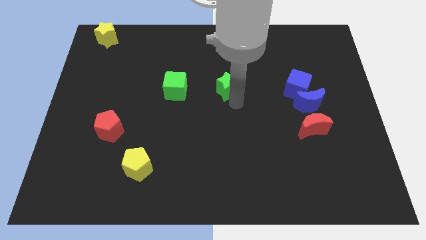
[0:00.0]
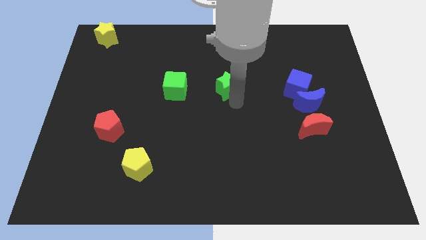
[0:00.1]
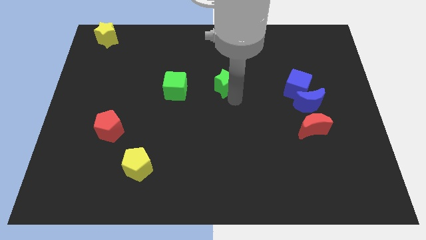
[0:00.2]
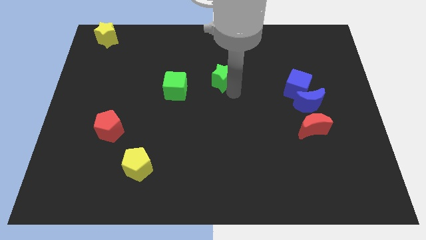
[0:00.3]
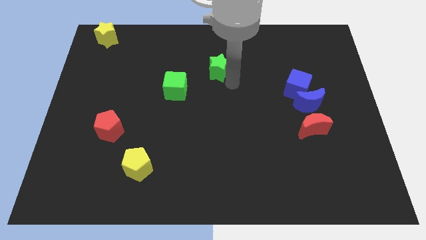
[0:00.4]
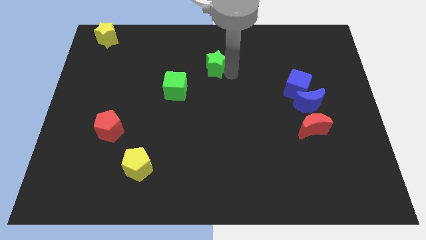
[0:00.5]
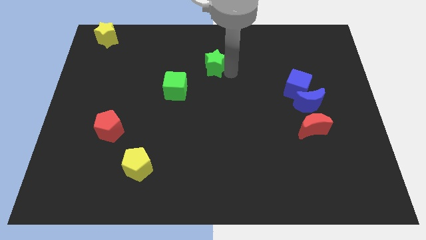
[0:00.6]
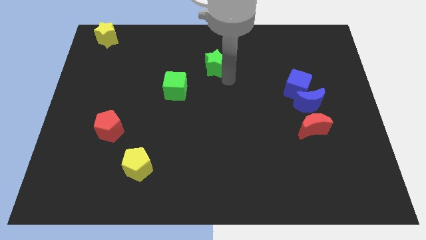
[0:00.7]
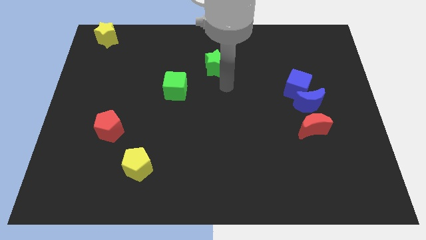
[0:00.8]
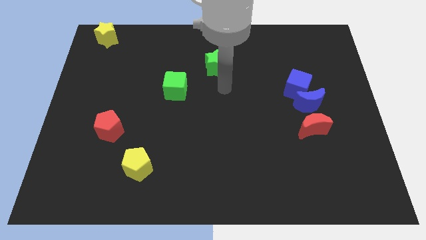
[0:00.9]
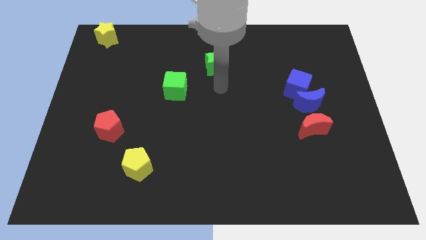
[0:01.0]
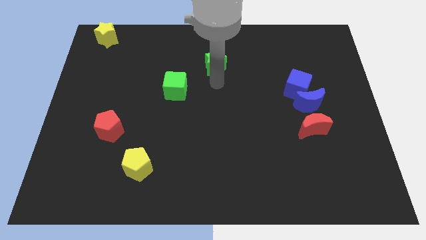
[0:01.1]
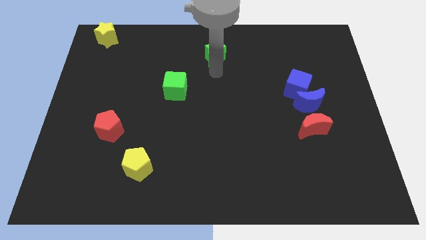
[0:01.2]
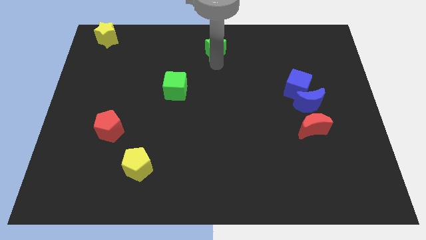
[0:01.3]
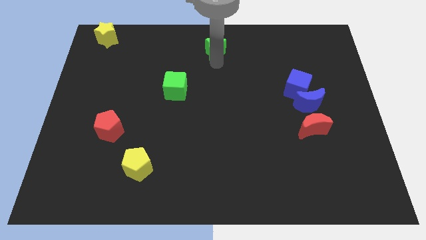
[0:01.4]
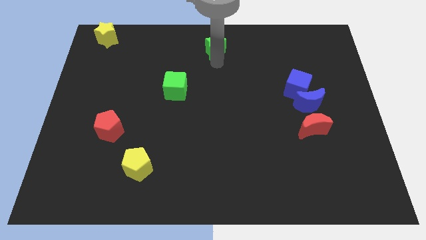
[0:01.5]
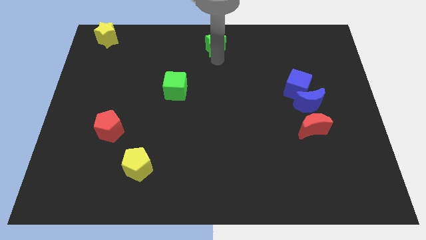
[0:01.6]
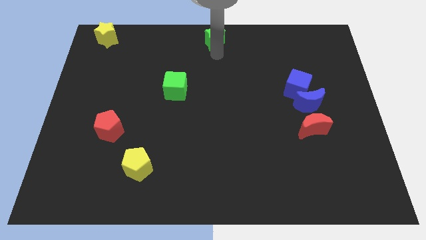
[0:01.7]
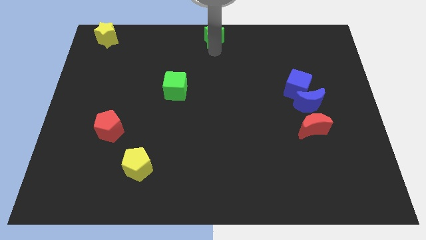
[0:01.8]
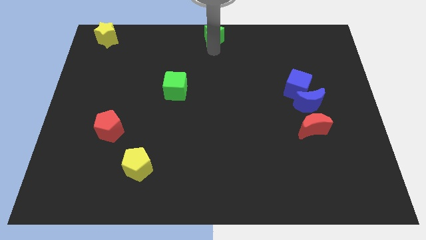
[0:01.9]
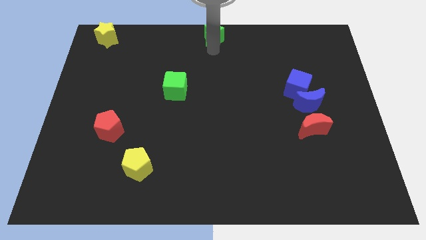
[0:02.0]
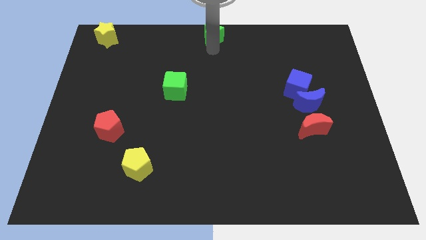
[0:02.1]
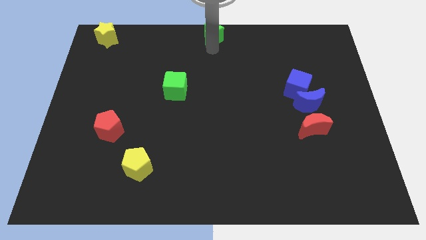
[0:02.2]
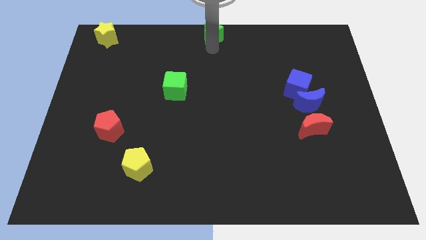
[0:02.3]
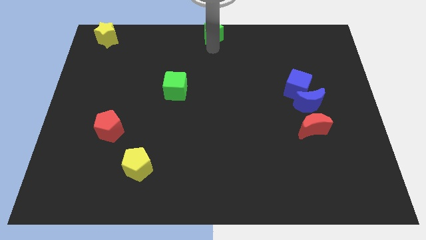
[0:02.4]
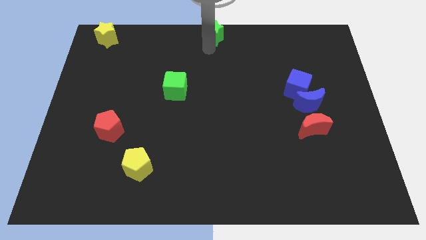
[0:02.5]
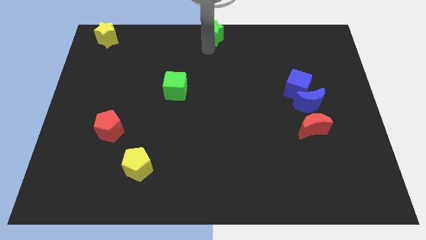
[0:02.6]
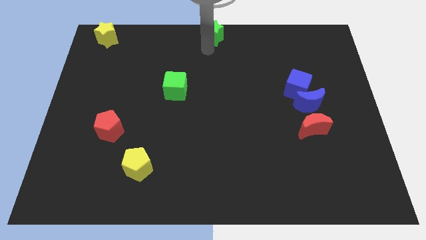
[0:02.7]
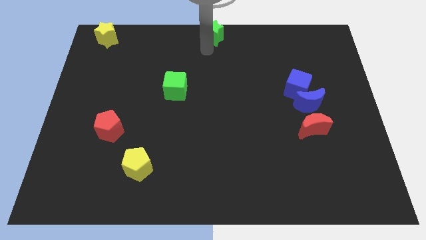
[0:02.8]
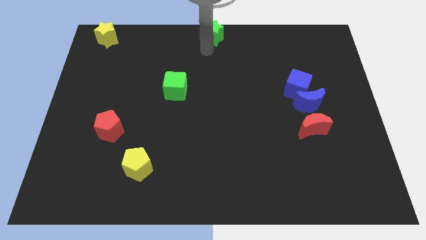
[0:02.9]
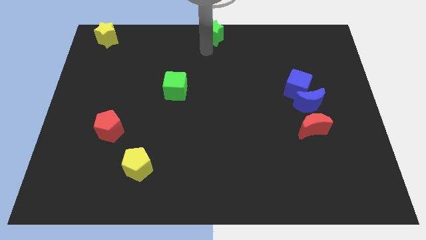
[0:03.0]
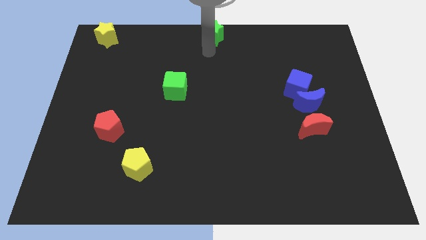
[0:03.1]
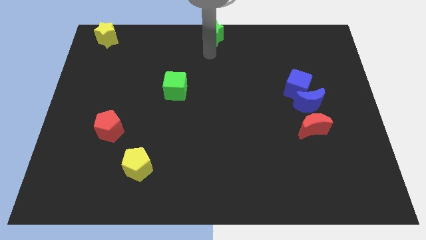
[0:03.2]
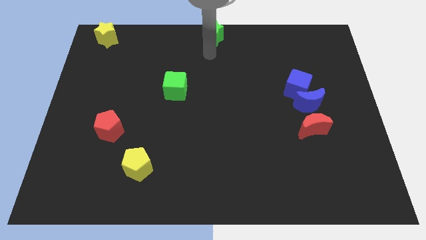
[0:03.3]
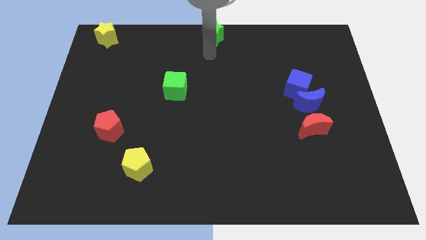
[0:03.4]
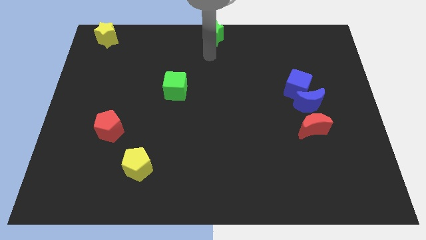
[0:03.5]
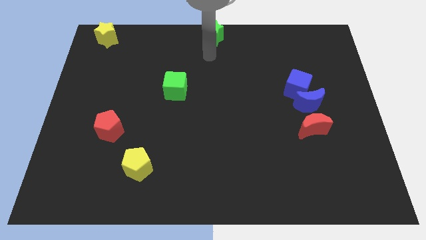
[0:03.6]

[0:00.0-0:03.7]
place the green star at the top center of the board

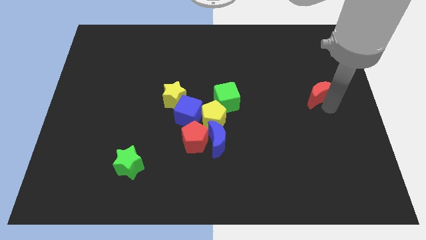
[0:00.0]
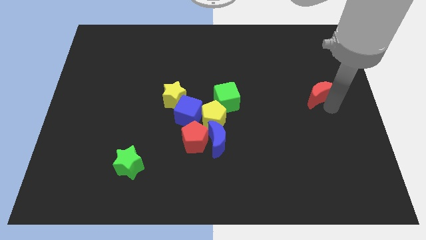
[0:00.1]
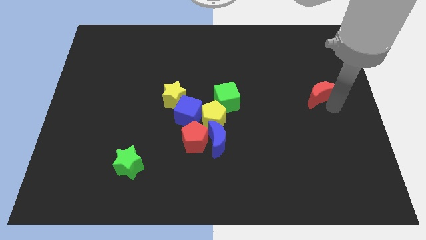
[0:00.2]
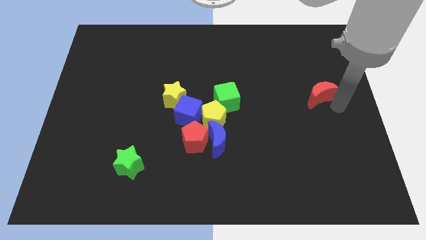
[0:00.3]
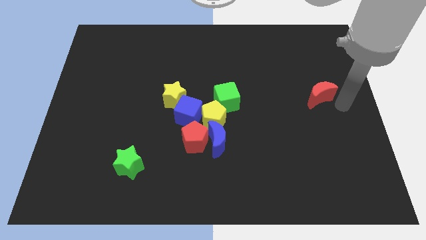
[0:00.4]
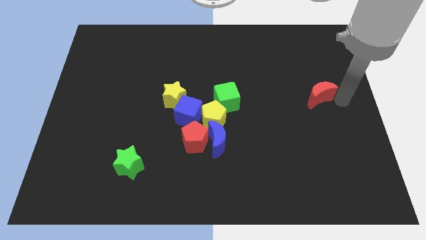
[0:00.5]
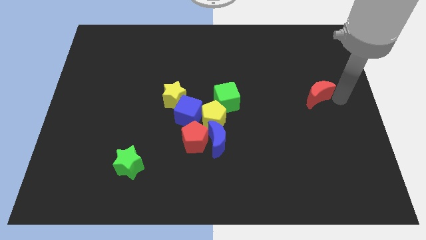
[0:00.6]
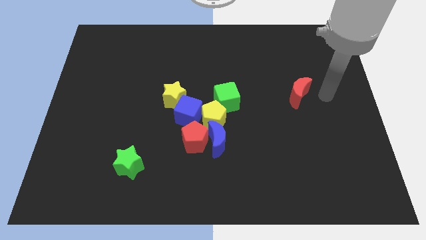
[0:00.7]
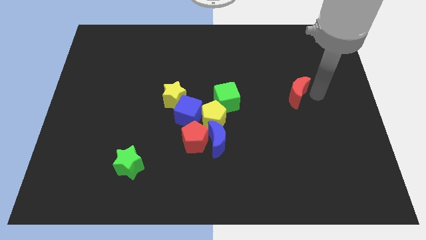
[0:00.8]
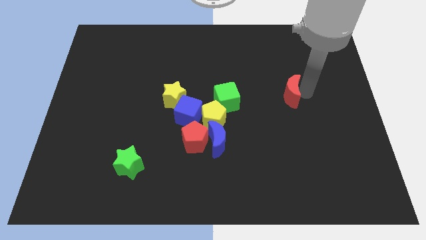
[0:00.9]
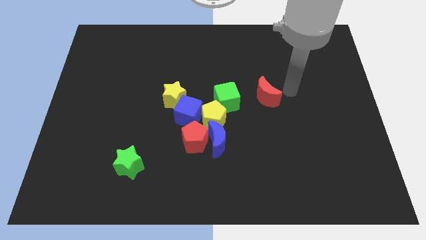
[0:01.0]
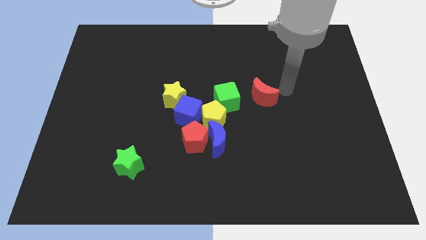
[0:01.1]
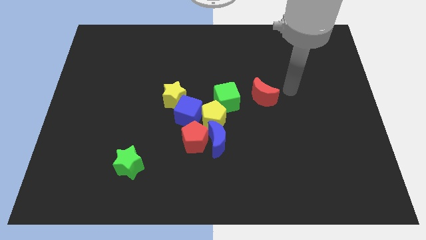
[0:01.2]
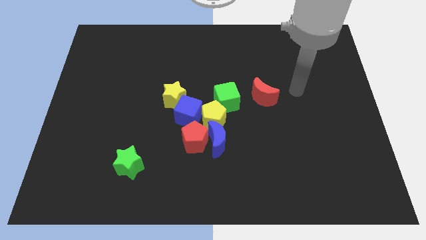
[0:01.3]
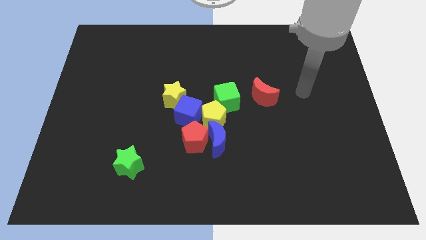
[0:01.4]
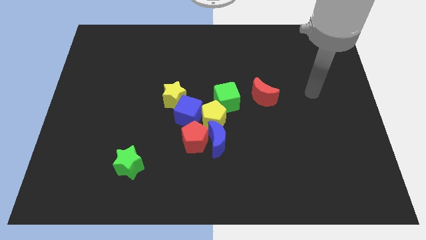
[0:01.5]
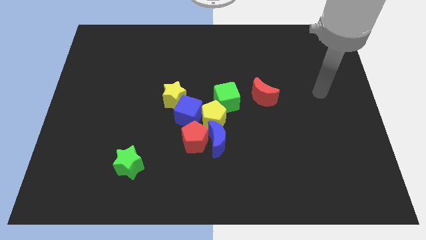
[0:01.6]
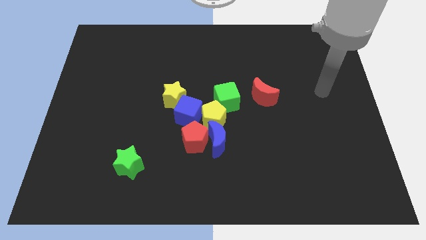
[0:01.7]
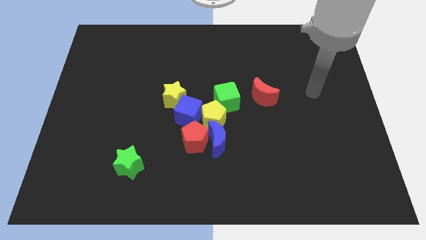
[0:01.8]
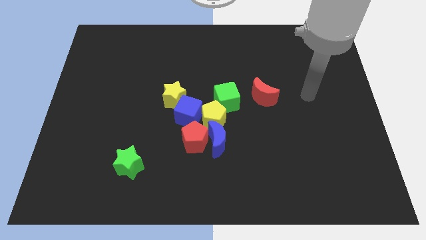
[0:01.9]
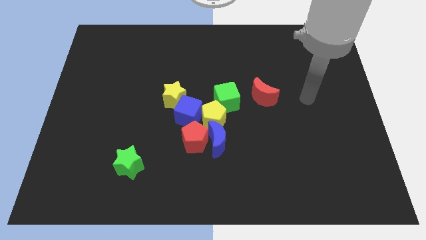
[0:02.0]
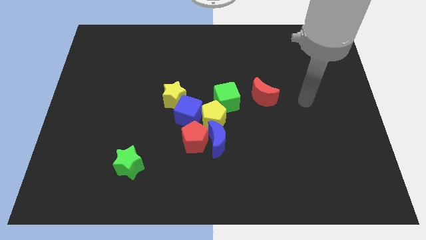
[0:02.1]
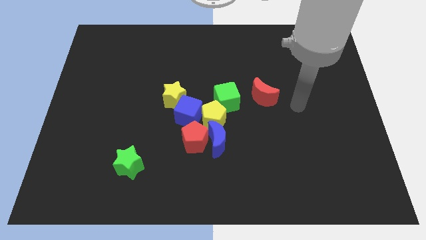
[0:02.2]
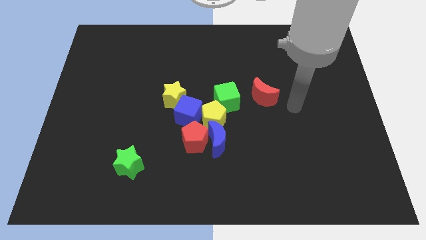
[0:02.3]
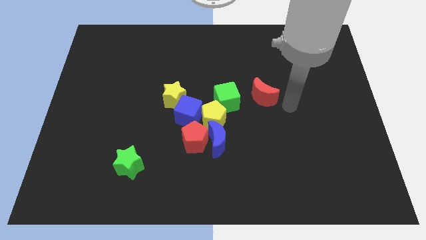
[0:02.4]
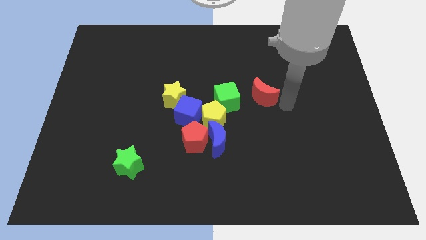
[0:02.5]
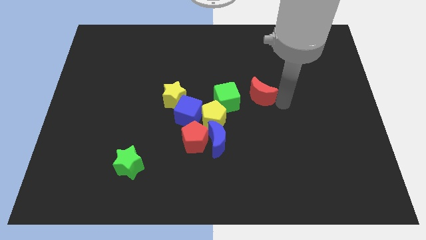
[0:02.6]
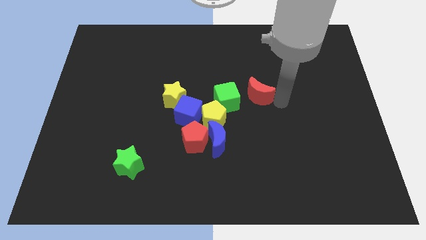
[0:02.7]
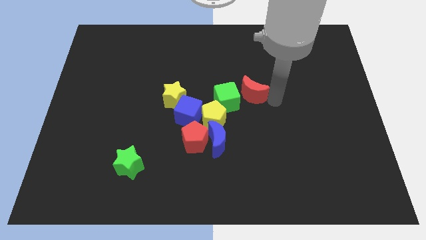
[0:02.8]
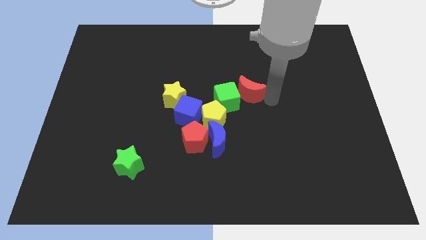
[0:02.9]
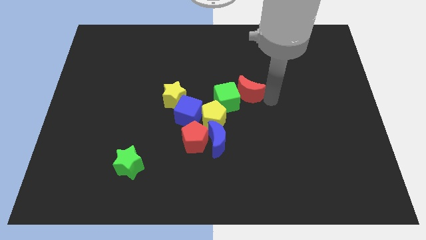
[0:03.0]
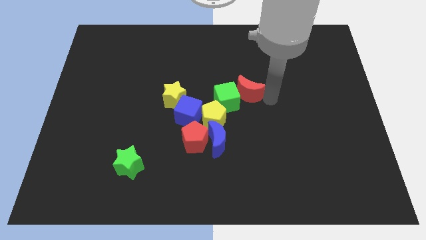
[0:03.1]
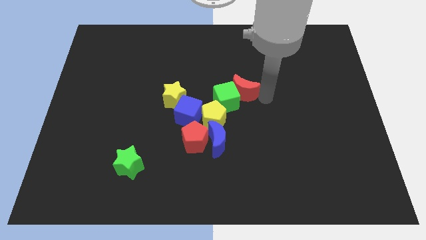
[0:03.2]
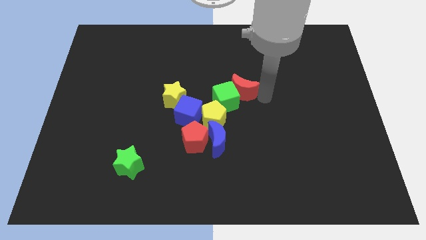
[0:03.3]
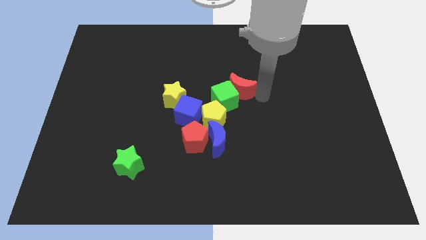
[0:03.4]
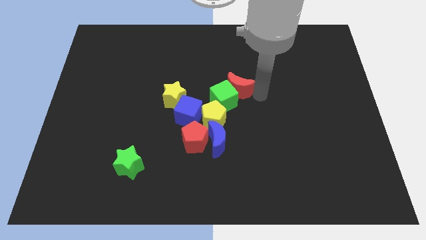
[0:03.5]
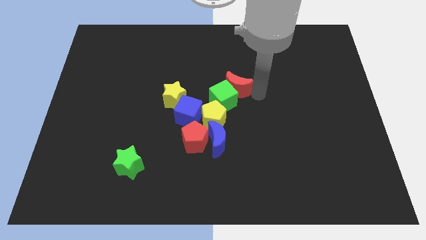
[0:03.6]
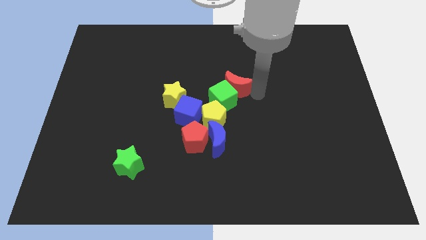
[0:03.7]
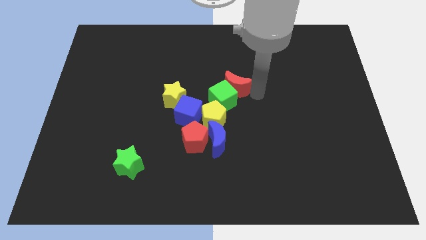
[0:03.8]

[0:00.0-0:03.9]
place red moon above the green cube

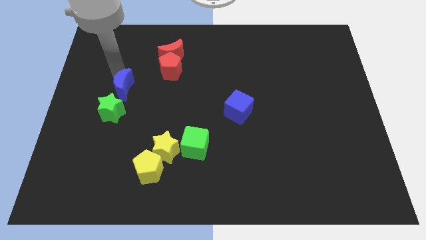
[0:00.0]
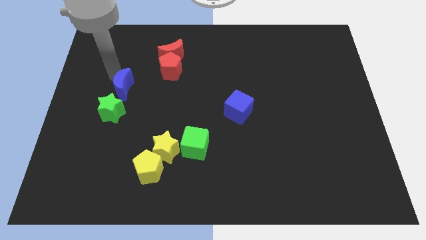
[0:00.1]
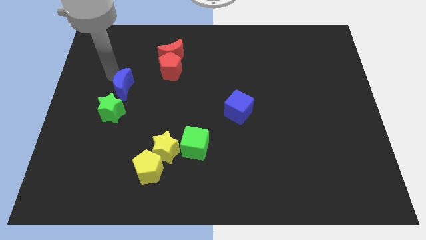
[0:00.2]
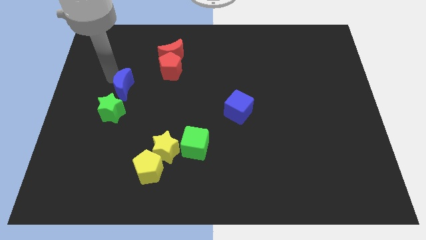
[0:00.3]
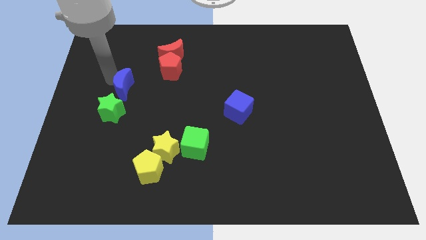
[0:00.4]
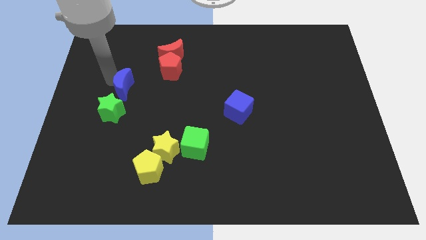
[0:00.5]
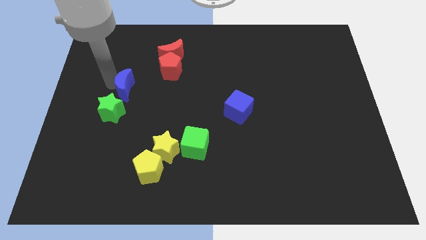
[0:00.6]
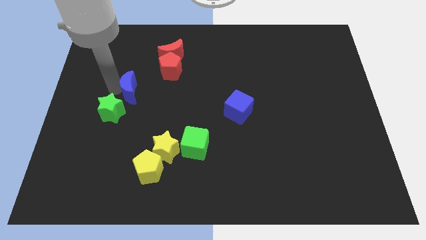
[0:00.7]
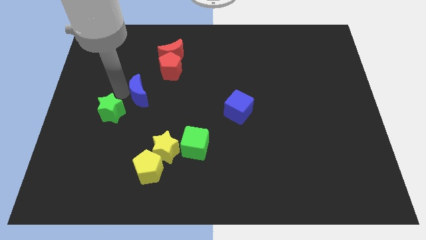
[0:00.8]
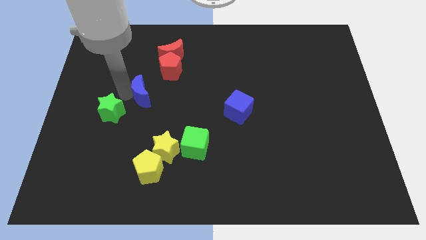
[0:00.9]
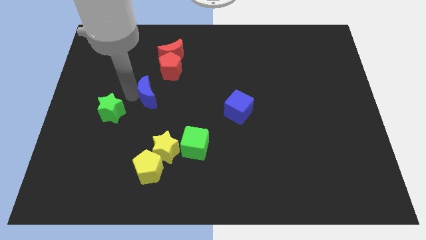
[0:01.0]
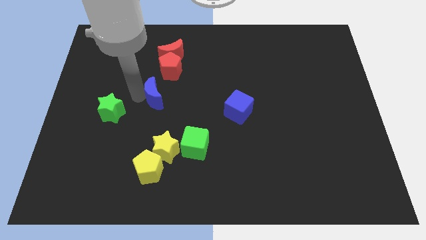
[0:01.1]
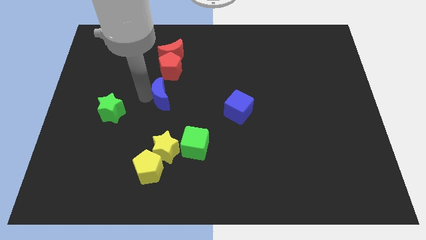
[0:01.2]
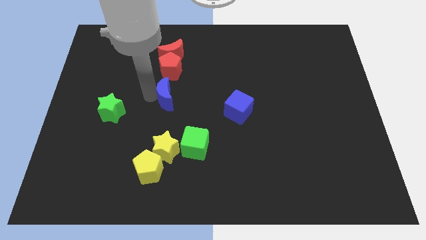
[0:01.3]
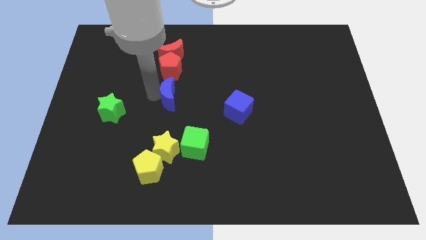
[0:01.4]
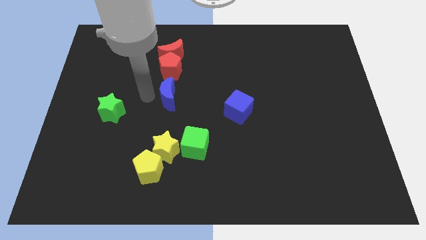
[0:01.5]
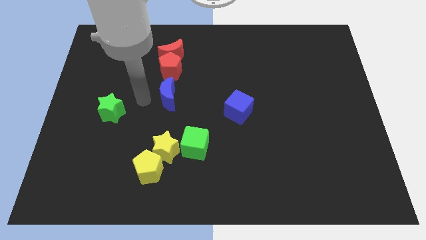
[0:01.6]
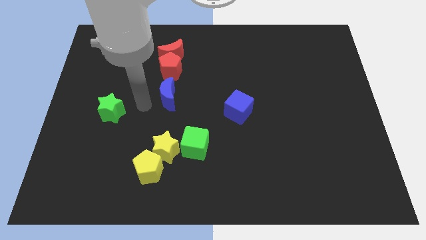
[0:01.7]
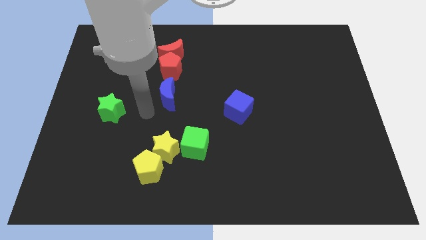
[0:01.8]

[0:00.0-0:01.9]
put the blue moon below red pentagon
